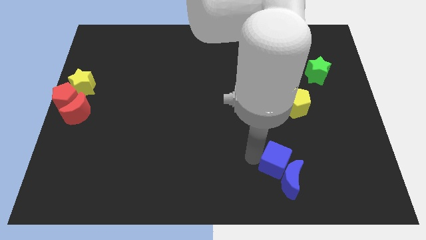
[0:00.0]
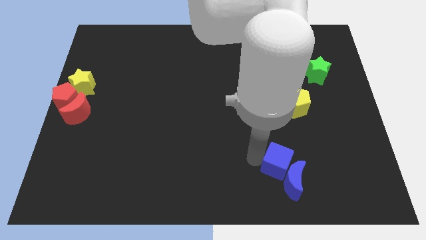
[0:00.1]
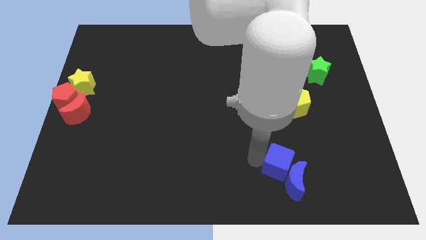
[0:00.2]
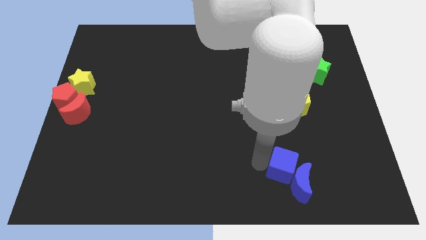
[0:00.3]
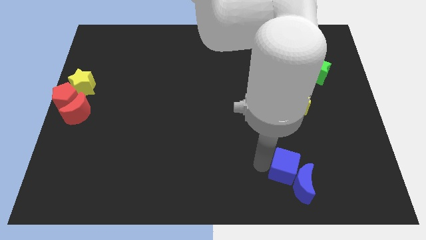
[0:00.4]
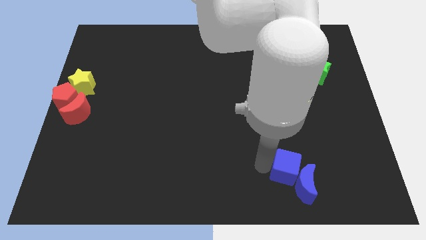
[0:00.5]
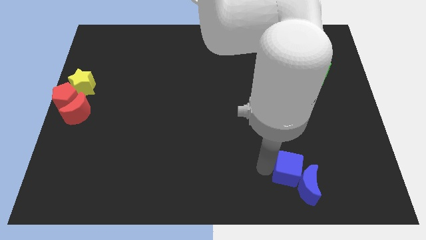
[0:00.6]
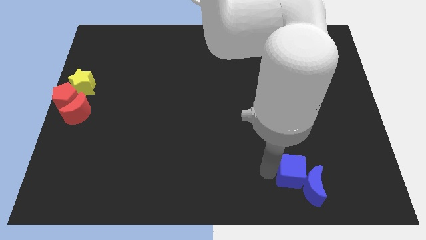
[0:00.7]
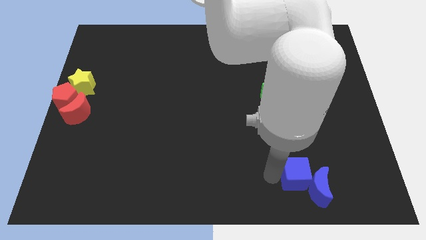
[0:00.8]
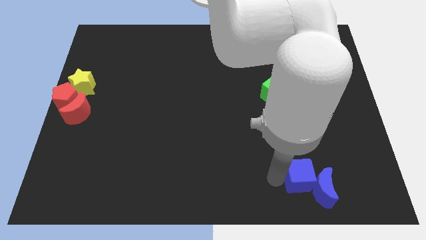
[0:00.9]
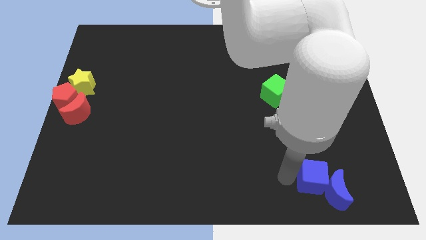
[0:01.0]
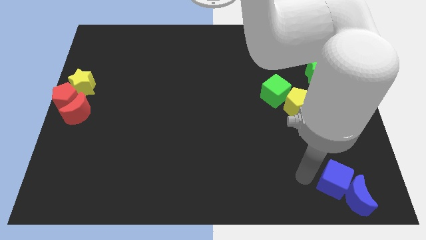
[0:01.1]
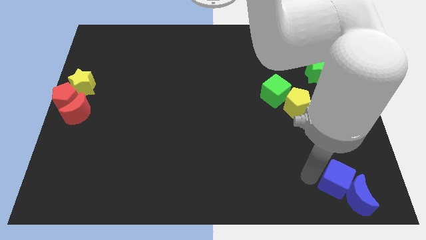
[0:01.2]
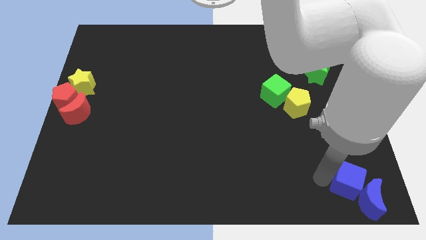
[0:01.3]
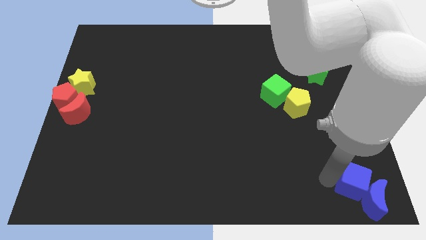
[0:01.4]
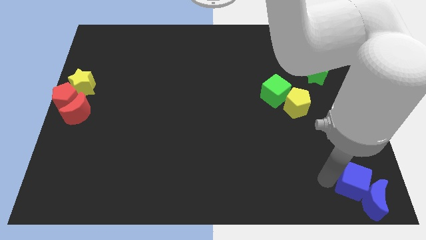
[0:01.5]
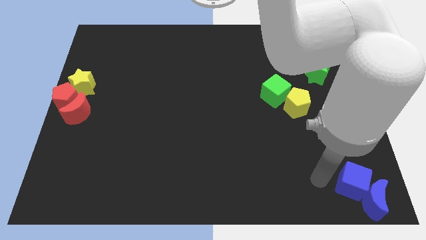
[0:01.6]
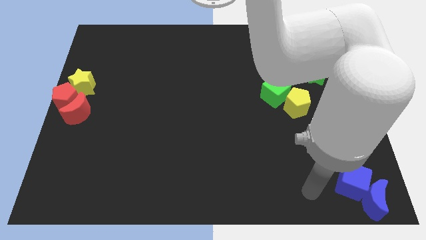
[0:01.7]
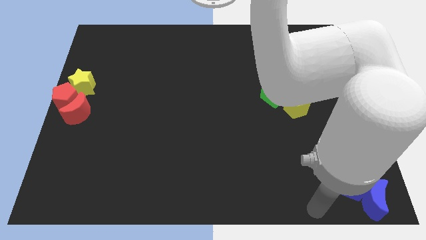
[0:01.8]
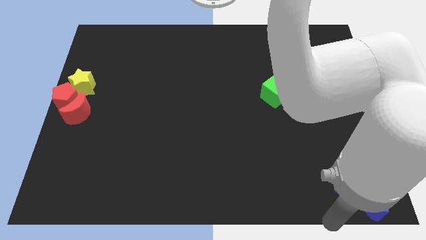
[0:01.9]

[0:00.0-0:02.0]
push the blue cube along with the blue moon towards the right bottom of the board

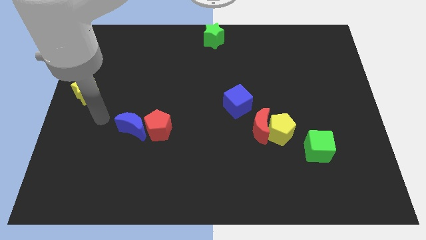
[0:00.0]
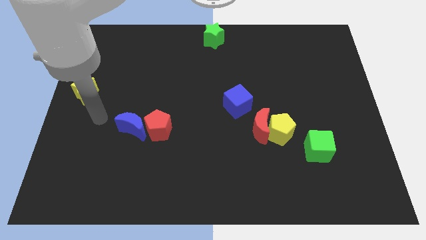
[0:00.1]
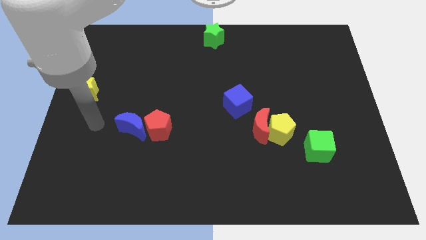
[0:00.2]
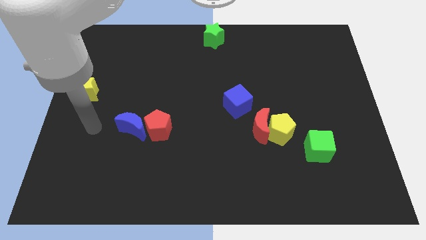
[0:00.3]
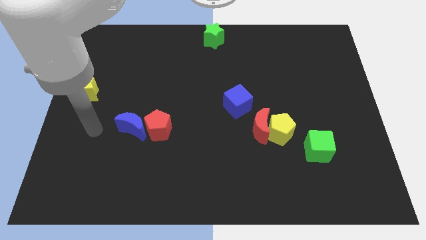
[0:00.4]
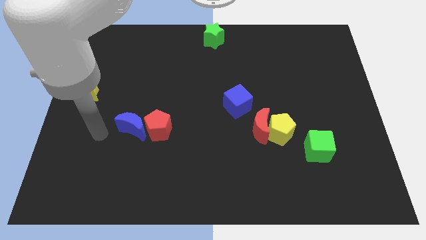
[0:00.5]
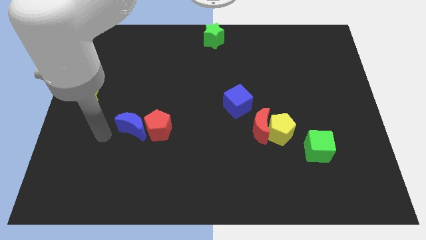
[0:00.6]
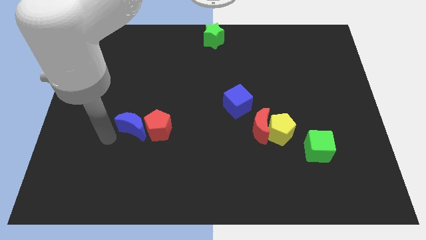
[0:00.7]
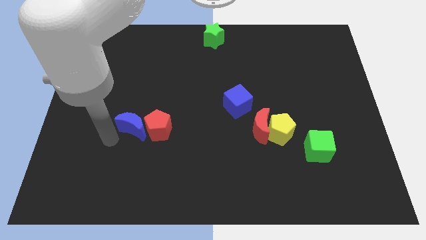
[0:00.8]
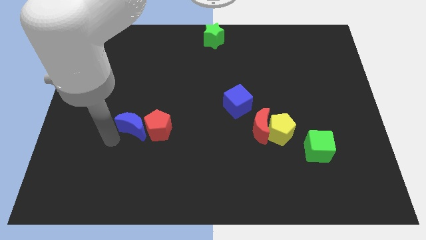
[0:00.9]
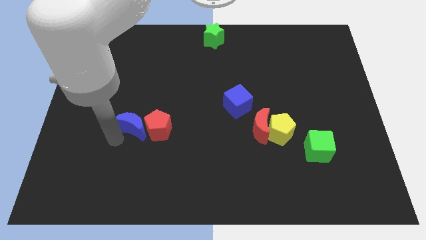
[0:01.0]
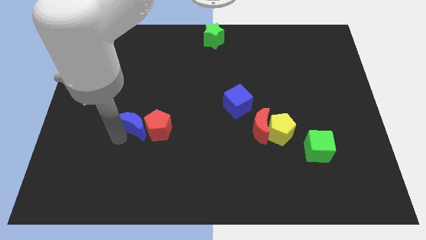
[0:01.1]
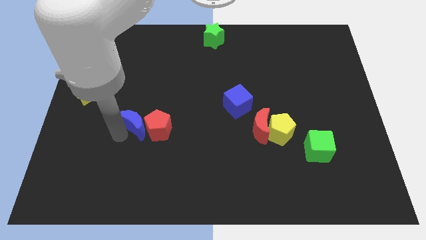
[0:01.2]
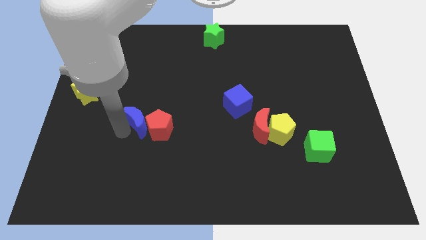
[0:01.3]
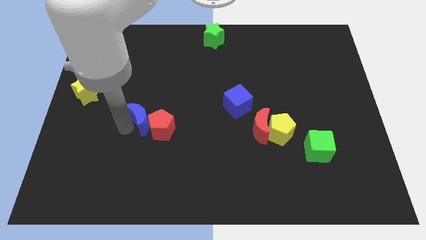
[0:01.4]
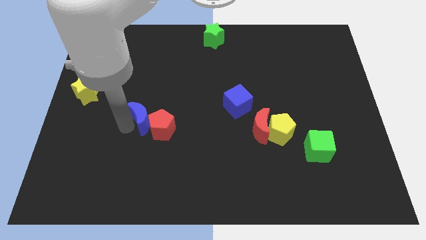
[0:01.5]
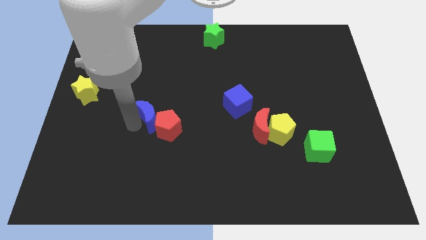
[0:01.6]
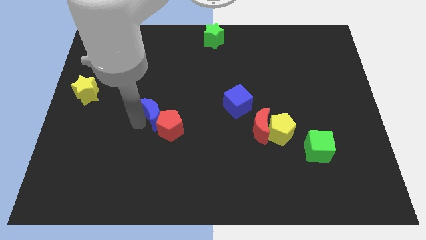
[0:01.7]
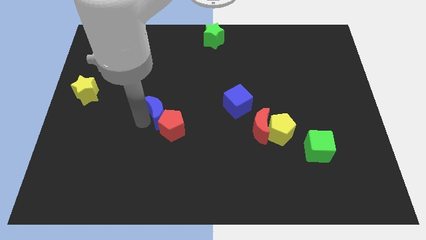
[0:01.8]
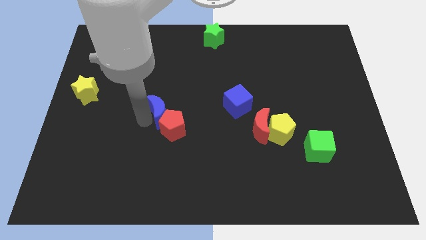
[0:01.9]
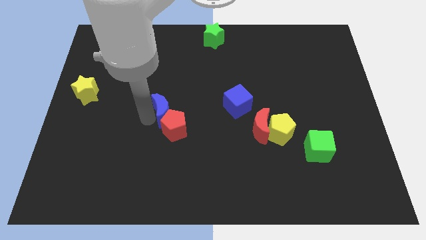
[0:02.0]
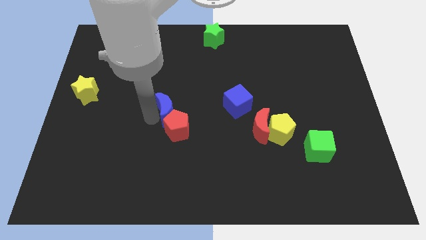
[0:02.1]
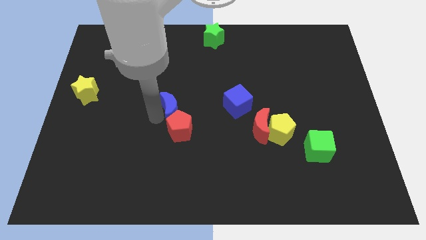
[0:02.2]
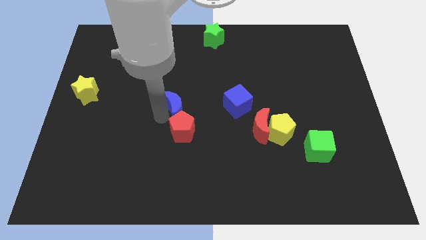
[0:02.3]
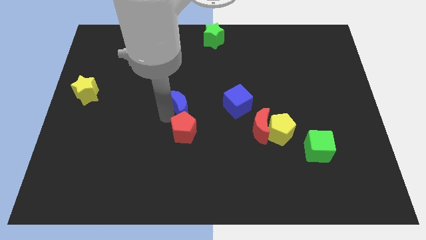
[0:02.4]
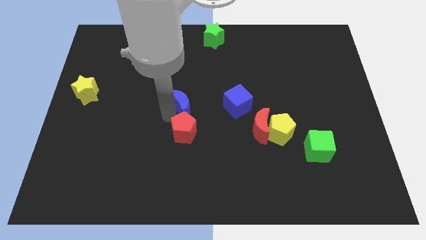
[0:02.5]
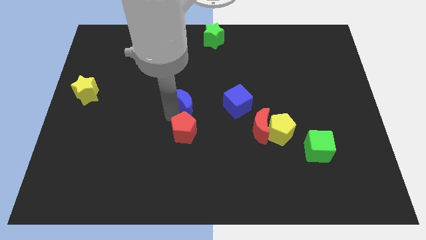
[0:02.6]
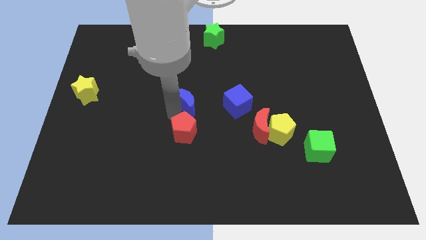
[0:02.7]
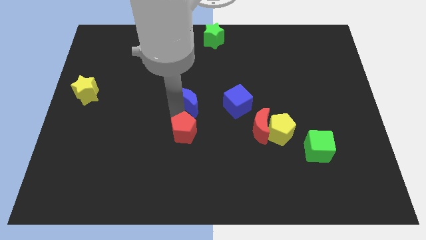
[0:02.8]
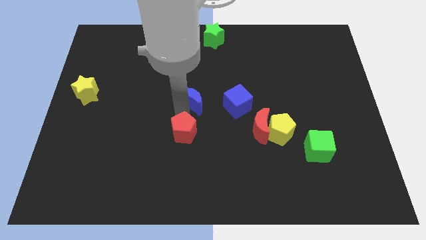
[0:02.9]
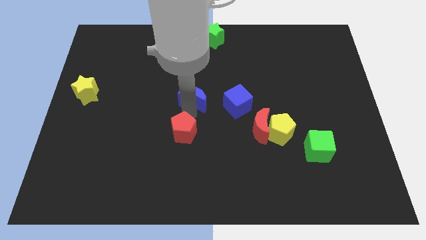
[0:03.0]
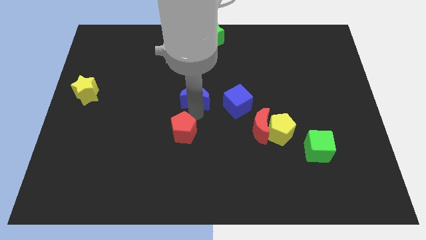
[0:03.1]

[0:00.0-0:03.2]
place the blue moon above the red pentagon

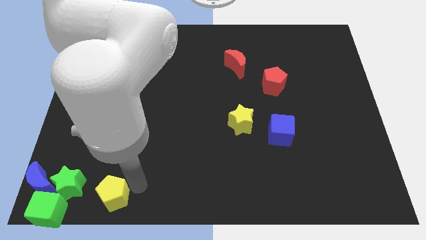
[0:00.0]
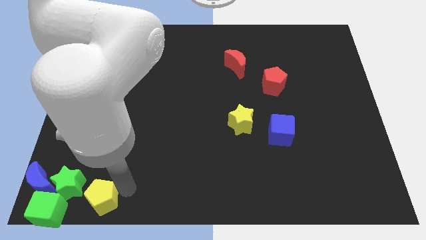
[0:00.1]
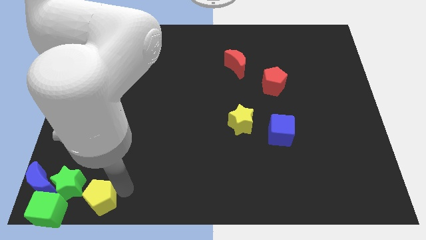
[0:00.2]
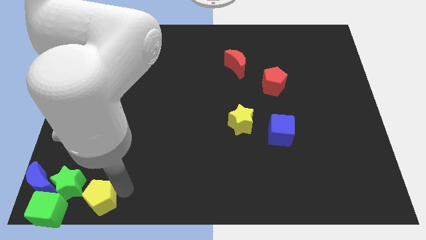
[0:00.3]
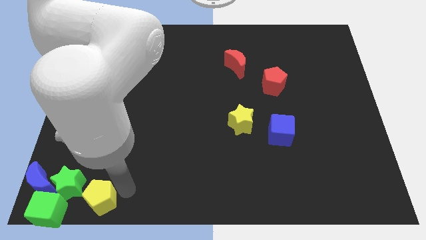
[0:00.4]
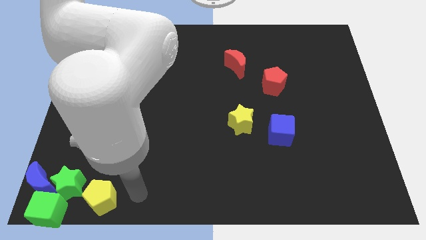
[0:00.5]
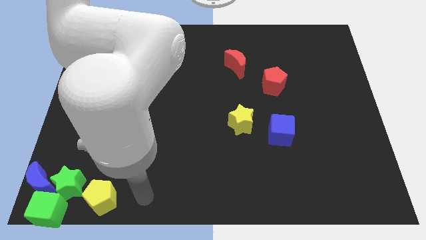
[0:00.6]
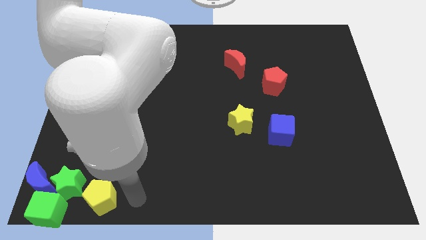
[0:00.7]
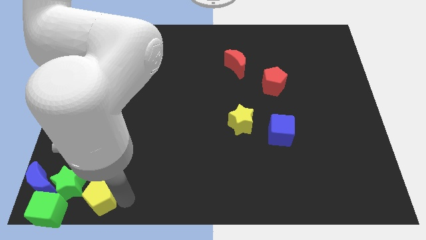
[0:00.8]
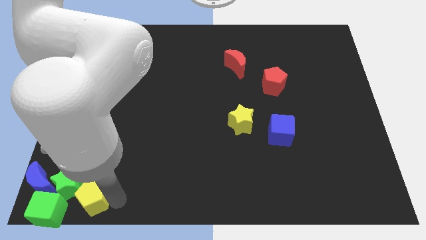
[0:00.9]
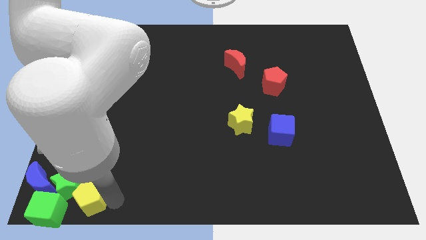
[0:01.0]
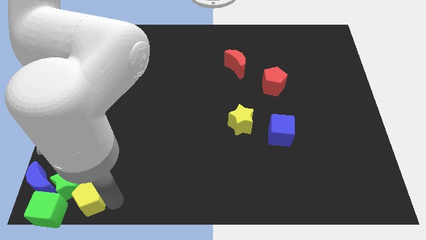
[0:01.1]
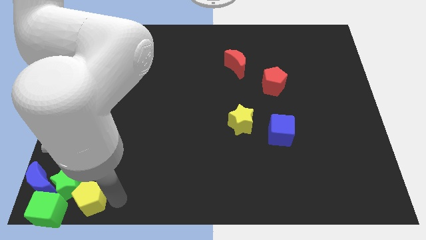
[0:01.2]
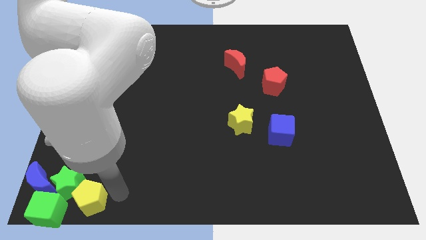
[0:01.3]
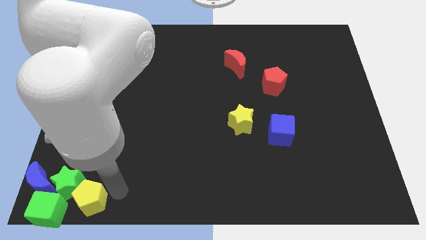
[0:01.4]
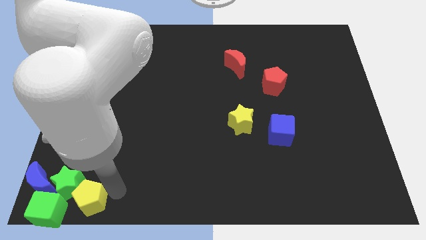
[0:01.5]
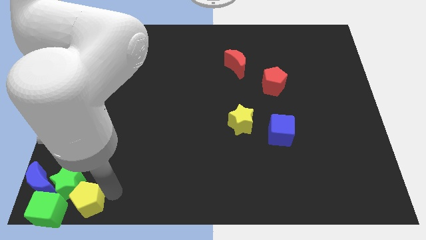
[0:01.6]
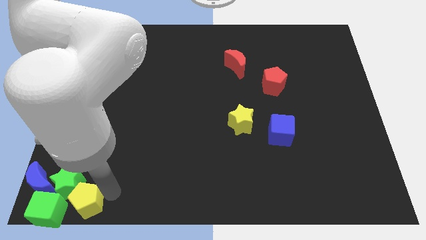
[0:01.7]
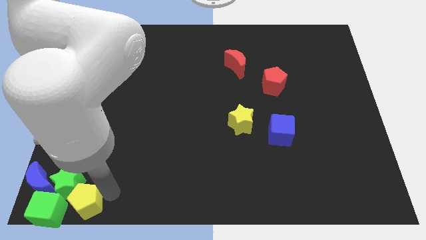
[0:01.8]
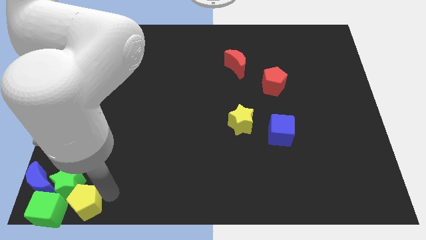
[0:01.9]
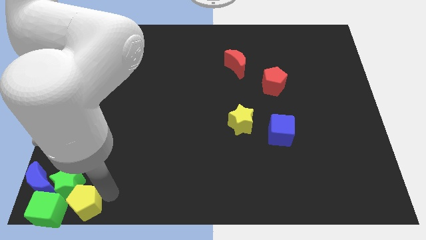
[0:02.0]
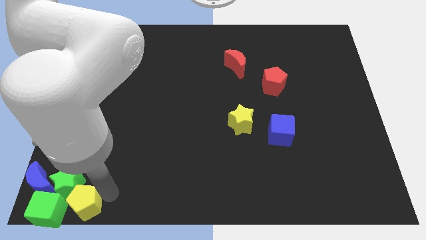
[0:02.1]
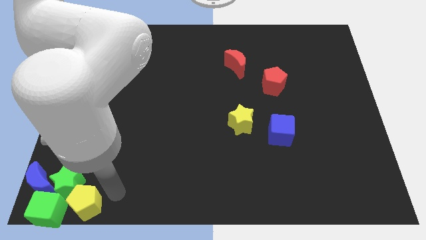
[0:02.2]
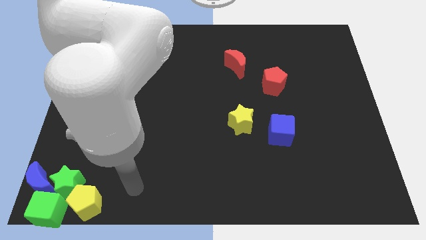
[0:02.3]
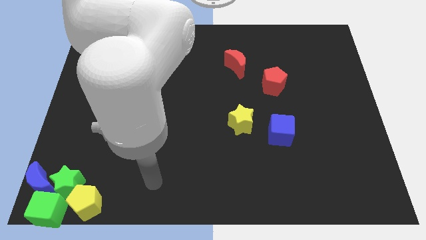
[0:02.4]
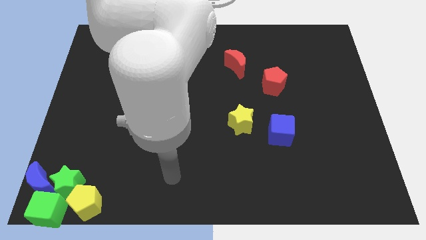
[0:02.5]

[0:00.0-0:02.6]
push the yellow pentagon into the green blocks

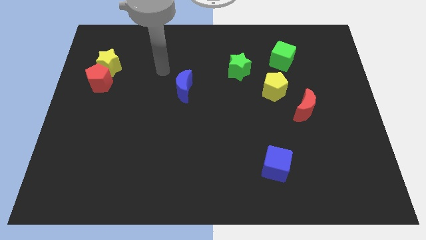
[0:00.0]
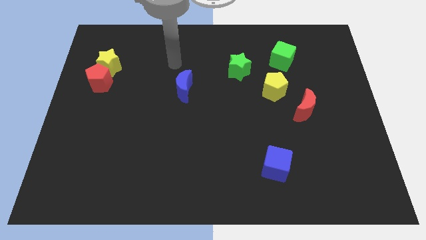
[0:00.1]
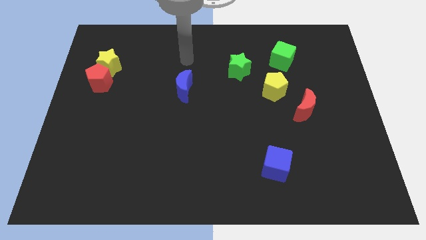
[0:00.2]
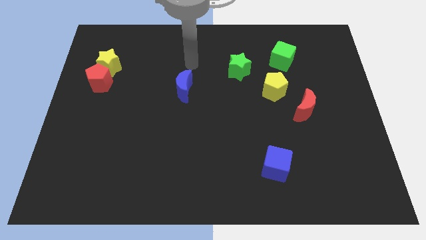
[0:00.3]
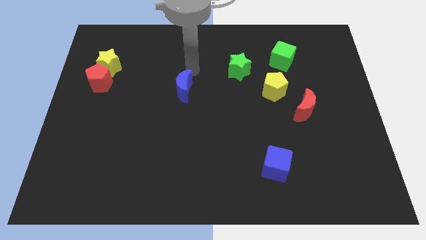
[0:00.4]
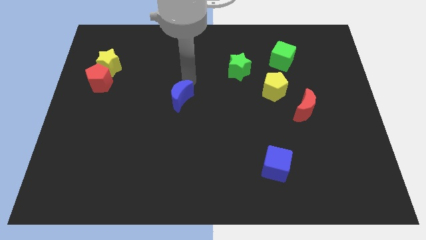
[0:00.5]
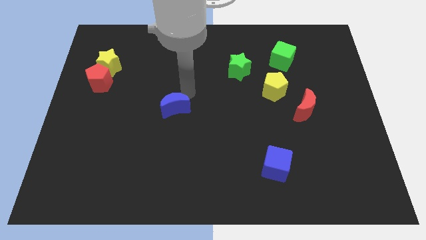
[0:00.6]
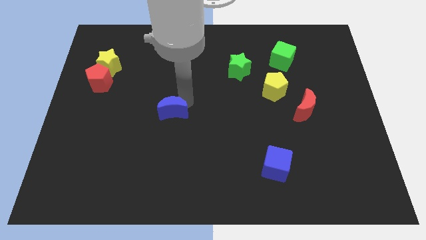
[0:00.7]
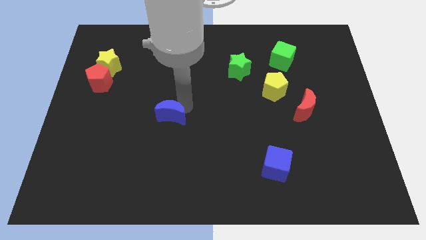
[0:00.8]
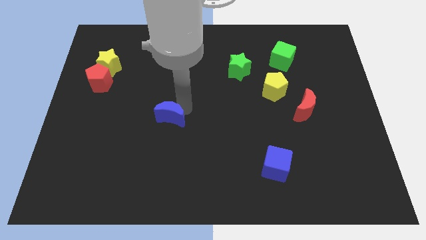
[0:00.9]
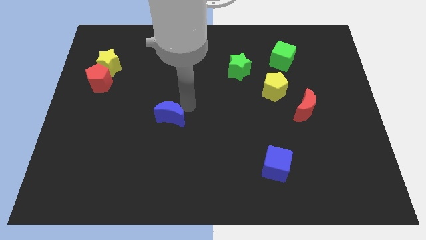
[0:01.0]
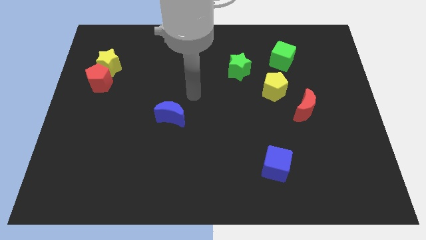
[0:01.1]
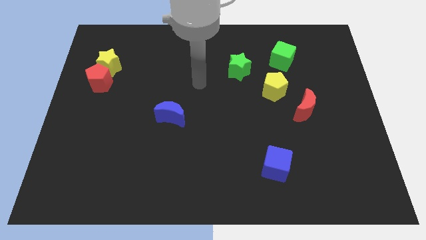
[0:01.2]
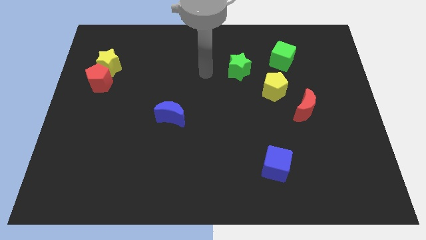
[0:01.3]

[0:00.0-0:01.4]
push blue moon to the bottom side of the board
